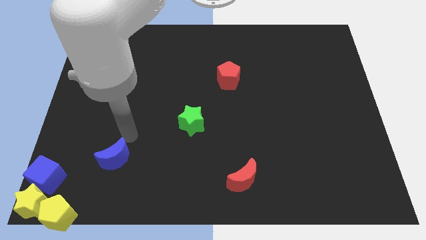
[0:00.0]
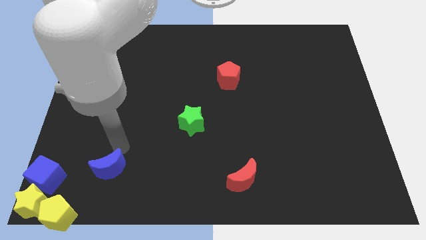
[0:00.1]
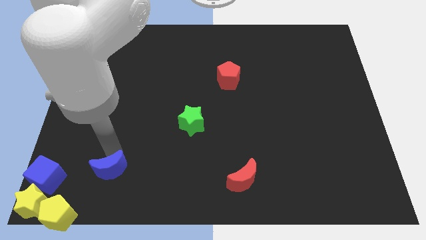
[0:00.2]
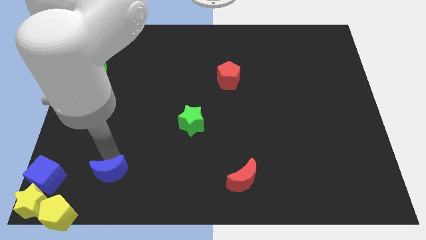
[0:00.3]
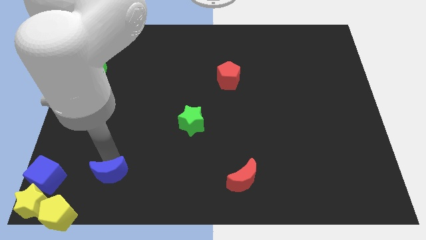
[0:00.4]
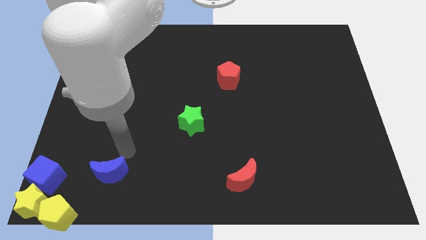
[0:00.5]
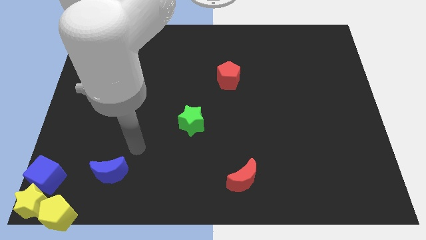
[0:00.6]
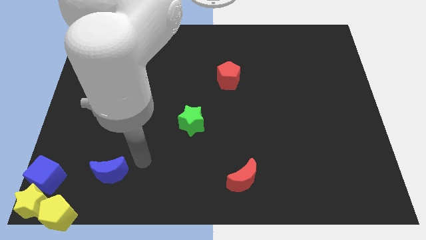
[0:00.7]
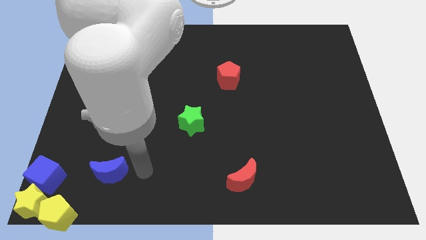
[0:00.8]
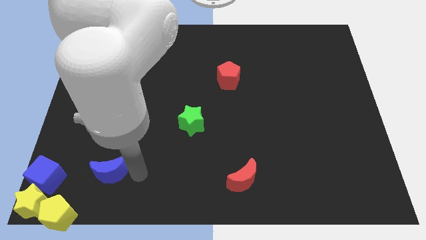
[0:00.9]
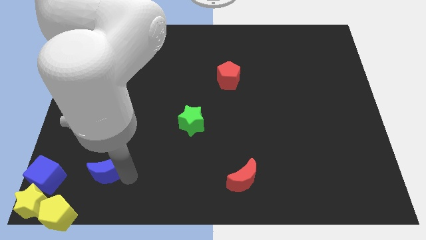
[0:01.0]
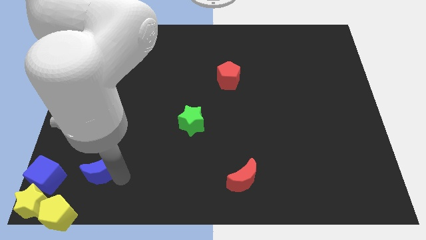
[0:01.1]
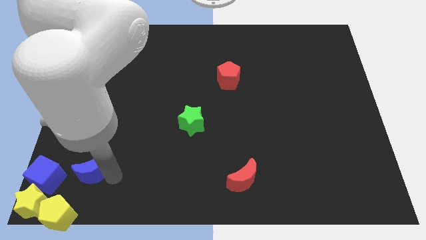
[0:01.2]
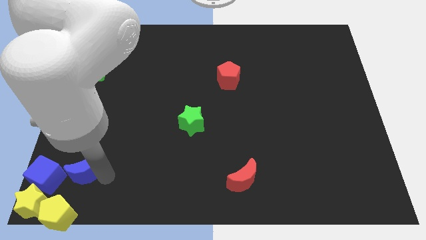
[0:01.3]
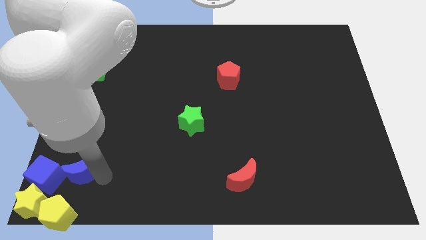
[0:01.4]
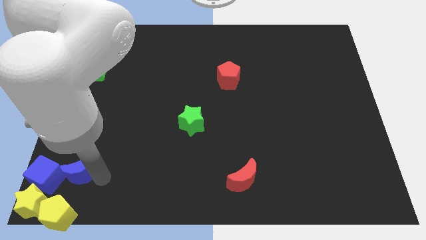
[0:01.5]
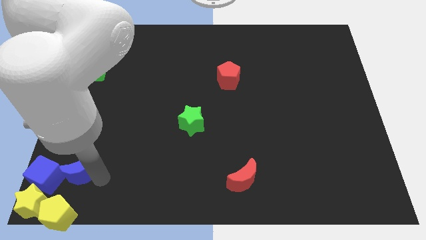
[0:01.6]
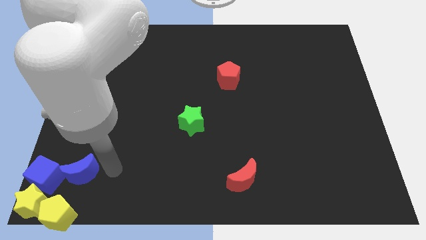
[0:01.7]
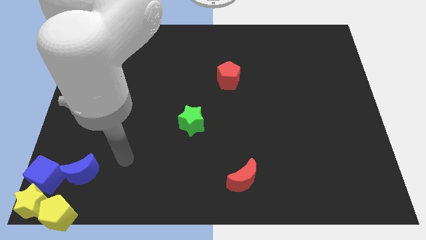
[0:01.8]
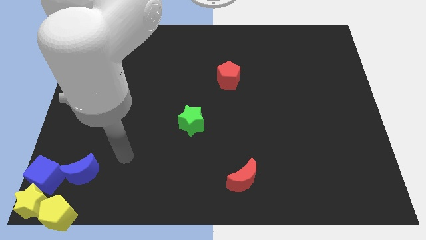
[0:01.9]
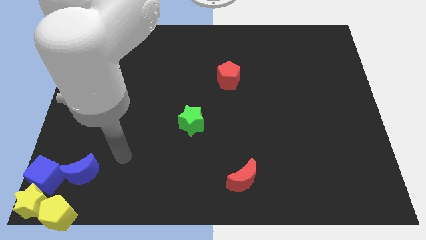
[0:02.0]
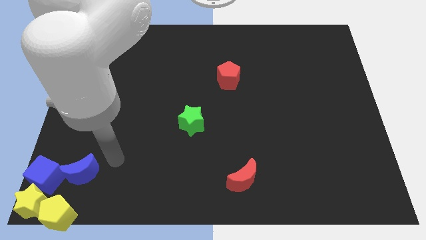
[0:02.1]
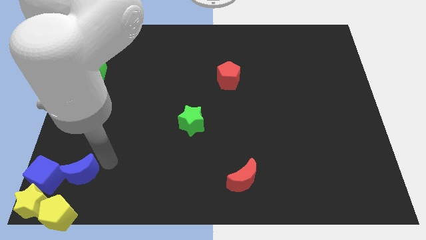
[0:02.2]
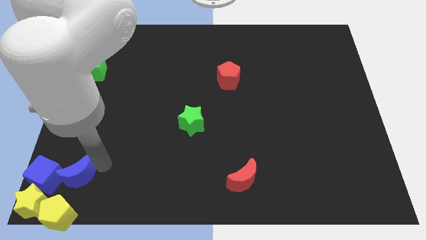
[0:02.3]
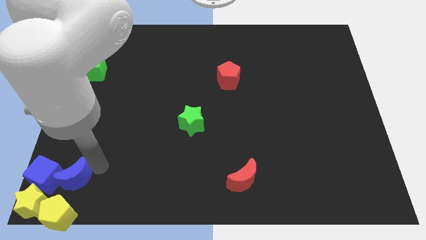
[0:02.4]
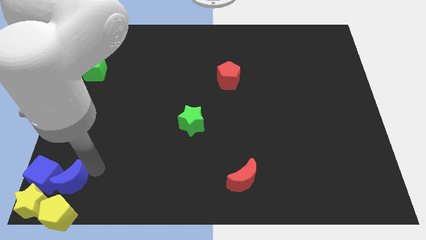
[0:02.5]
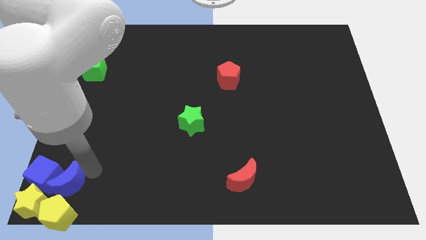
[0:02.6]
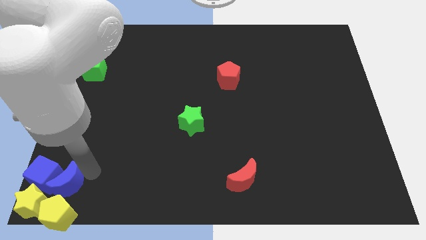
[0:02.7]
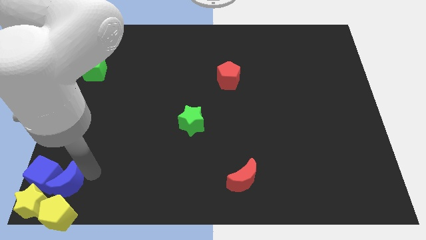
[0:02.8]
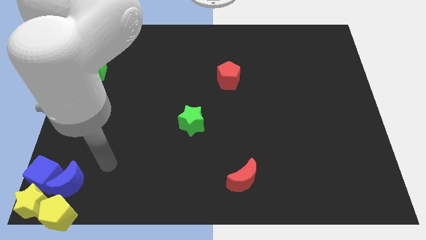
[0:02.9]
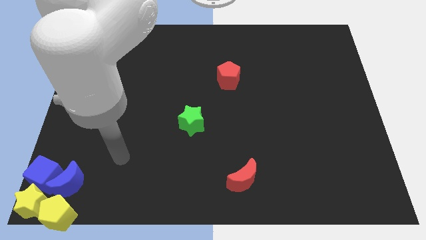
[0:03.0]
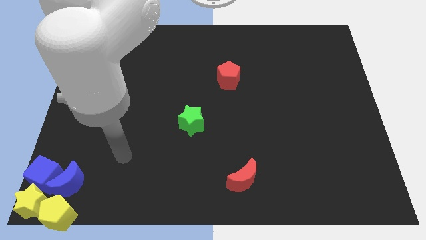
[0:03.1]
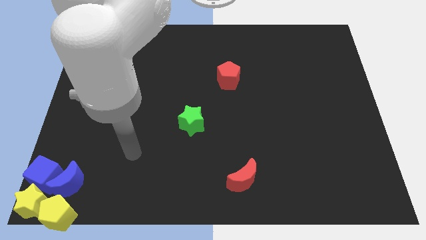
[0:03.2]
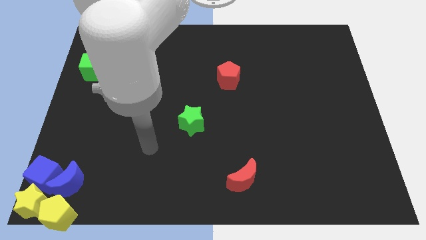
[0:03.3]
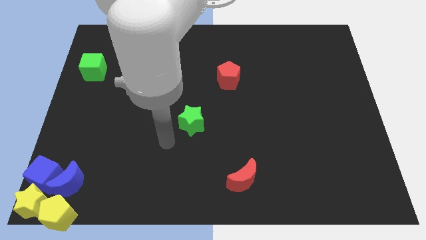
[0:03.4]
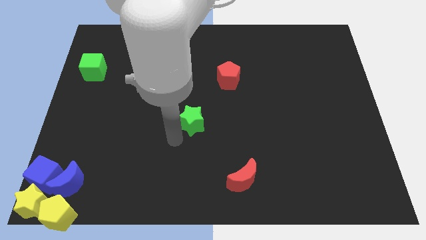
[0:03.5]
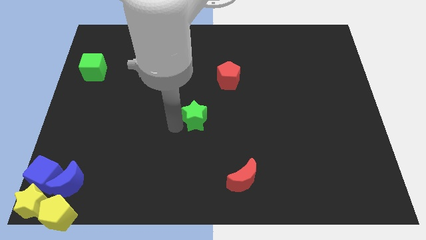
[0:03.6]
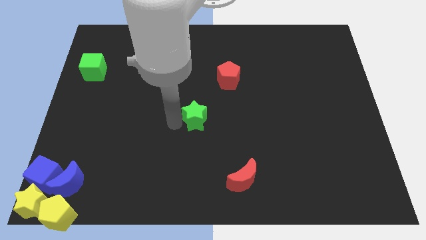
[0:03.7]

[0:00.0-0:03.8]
move the blue moon above the yellow pentagon

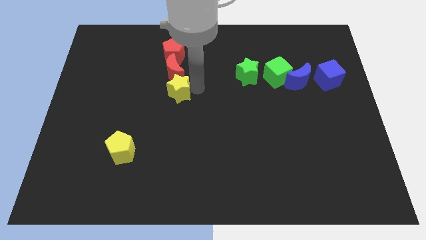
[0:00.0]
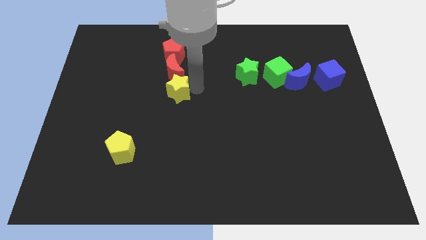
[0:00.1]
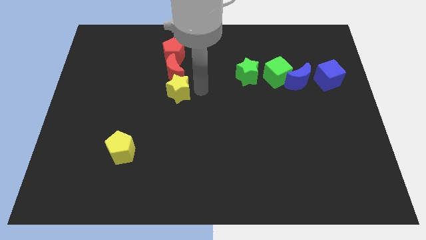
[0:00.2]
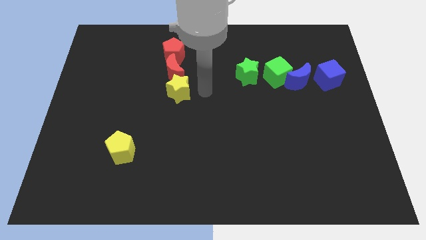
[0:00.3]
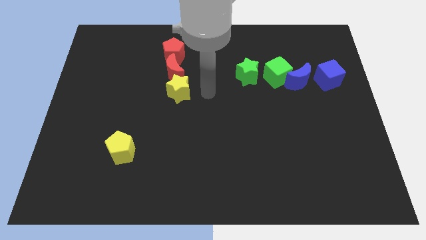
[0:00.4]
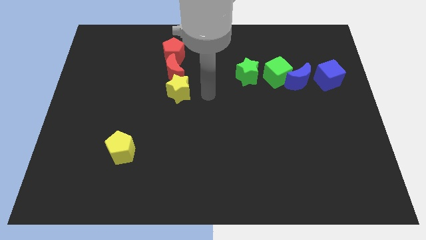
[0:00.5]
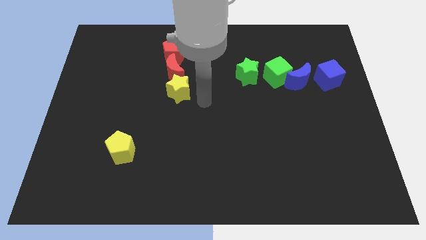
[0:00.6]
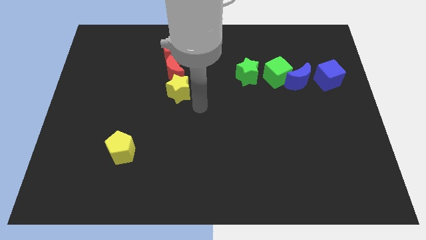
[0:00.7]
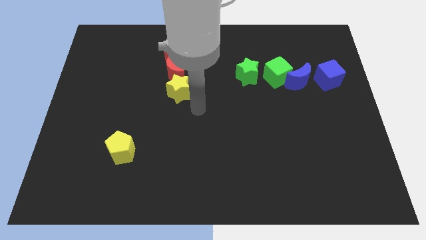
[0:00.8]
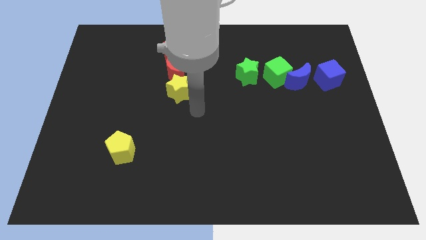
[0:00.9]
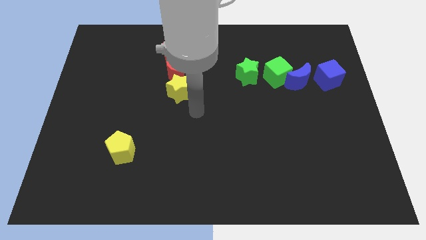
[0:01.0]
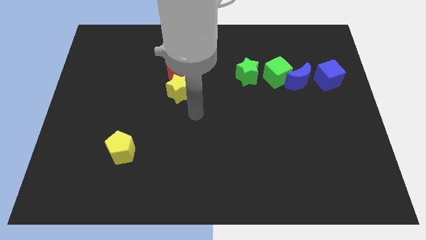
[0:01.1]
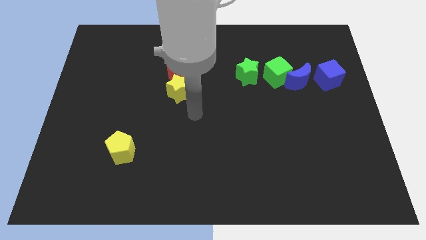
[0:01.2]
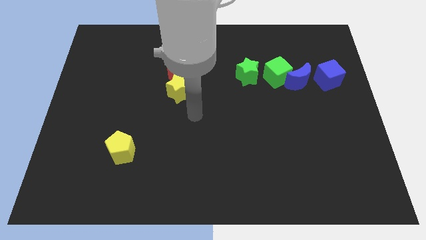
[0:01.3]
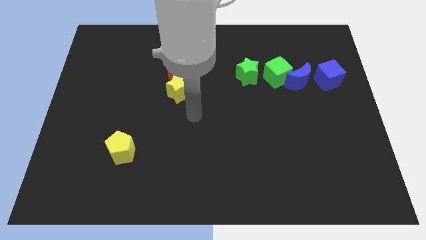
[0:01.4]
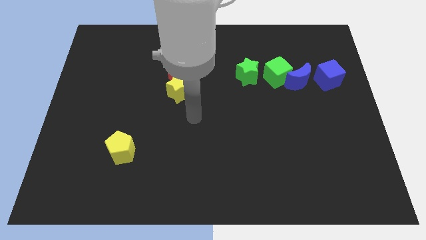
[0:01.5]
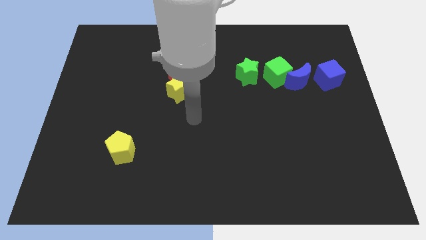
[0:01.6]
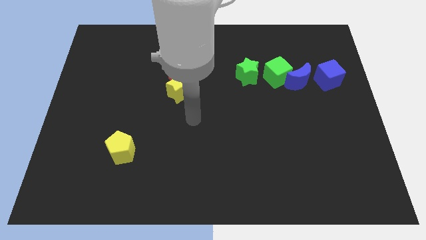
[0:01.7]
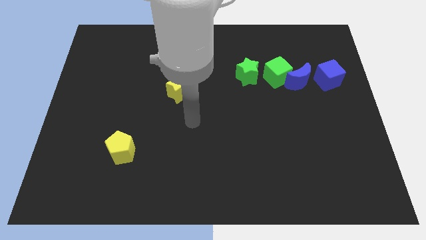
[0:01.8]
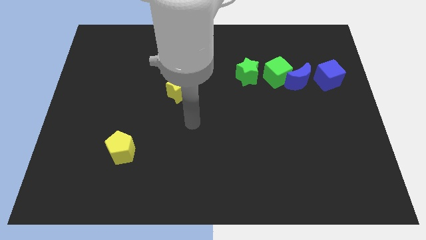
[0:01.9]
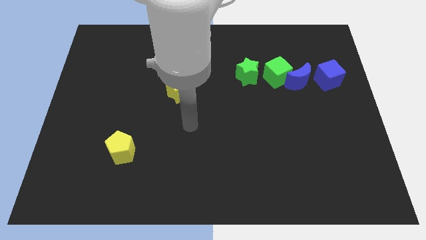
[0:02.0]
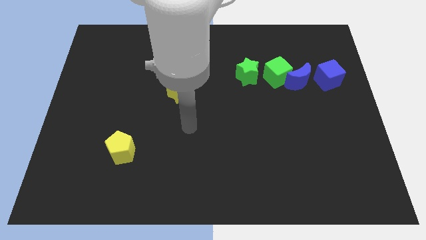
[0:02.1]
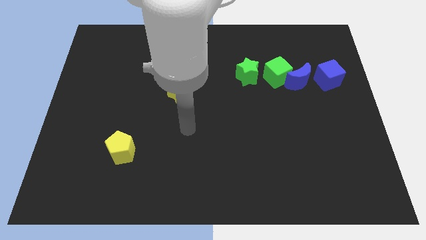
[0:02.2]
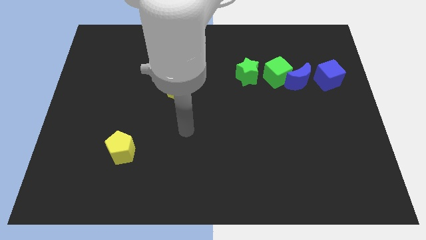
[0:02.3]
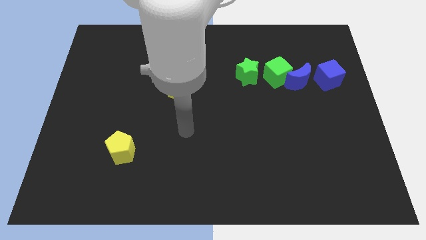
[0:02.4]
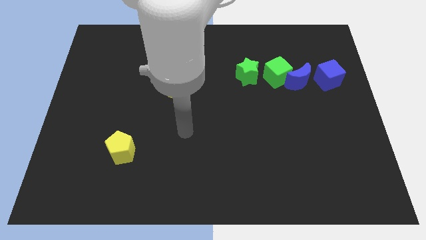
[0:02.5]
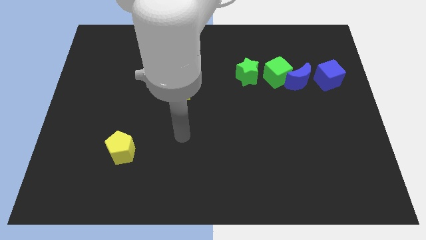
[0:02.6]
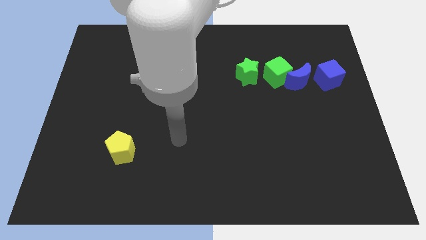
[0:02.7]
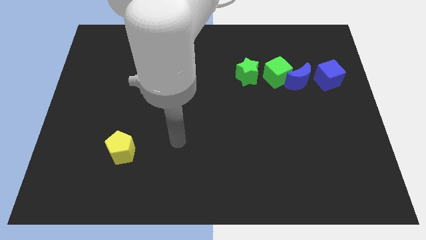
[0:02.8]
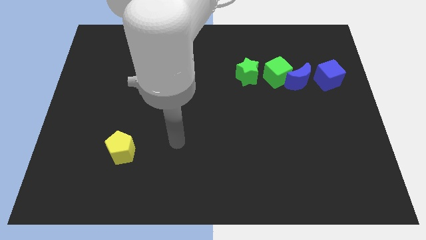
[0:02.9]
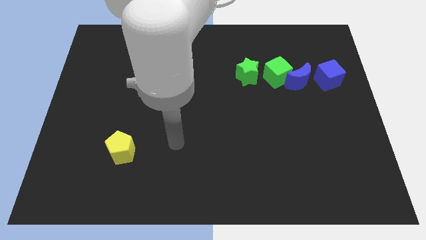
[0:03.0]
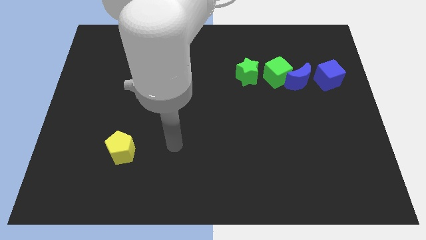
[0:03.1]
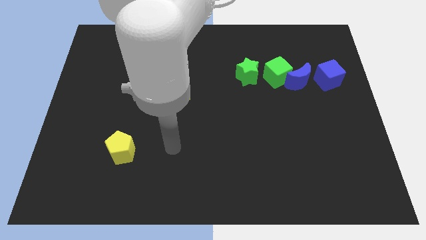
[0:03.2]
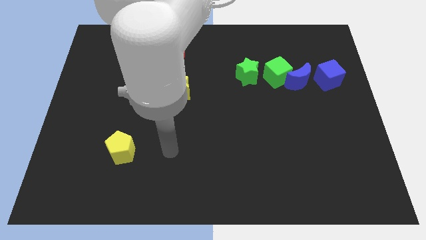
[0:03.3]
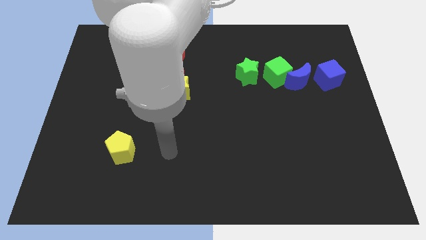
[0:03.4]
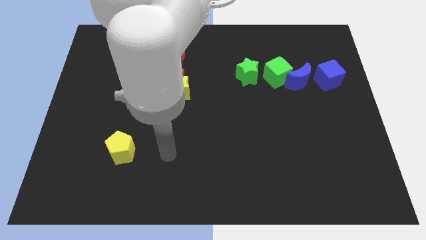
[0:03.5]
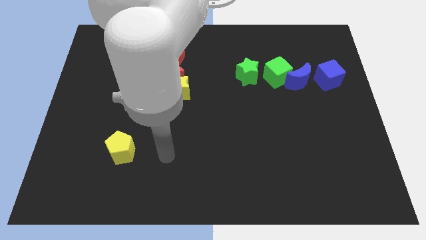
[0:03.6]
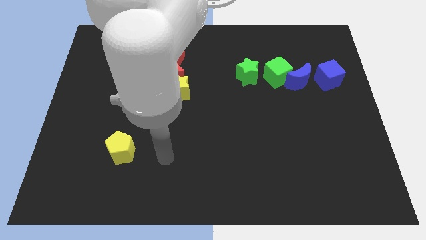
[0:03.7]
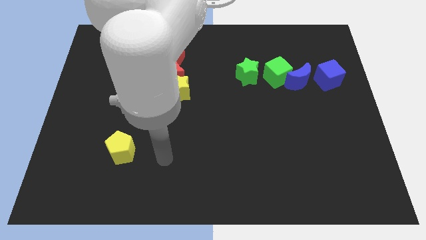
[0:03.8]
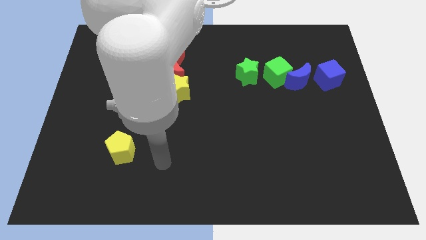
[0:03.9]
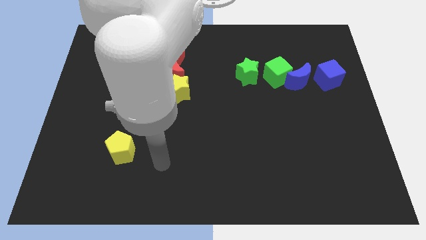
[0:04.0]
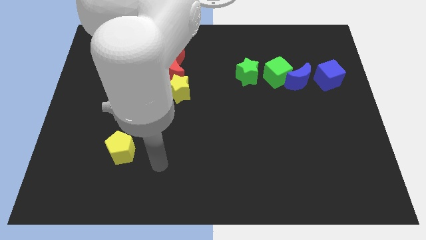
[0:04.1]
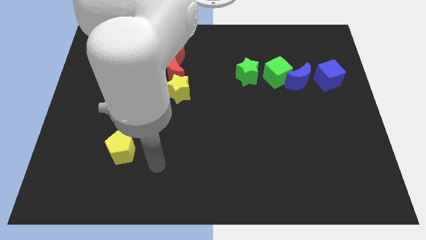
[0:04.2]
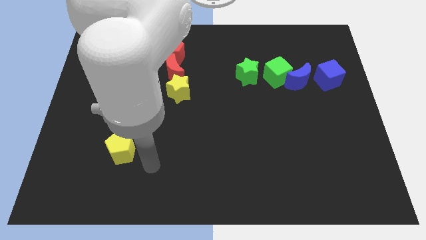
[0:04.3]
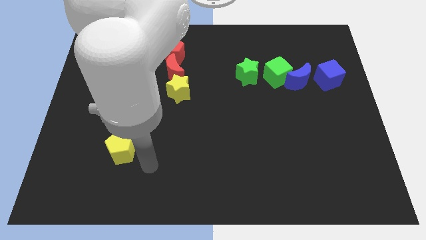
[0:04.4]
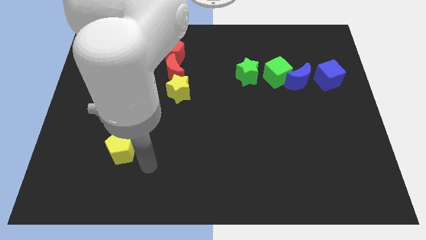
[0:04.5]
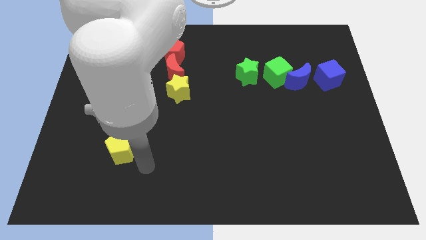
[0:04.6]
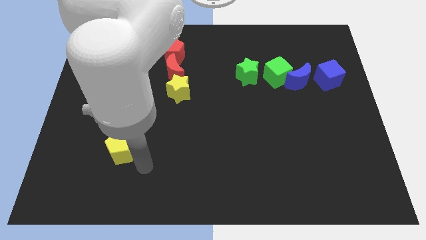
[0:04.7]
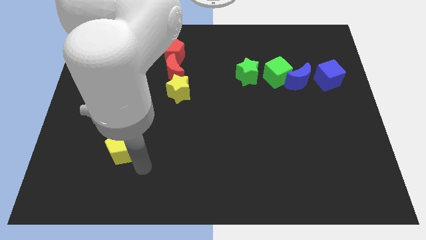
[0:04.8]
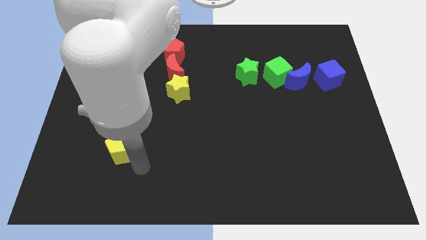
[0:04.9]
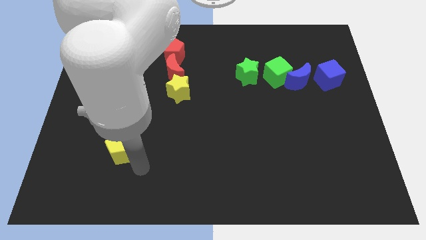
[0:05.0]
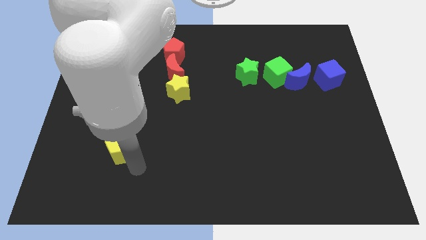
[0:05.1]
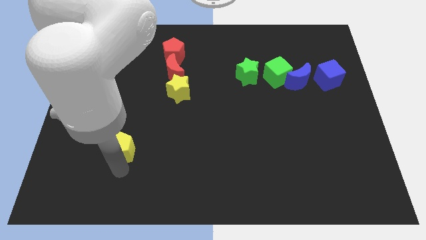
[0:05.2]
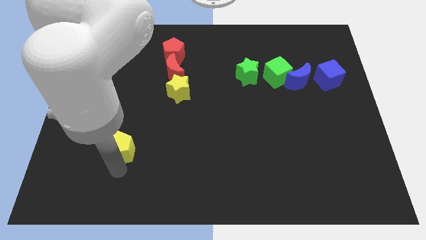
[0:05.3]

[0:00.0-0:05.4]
place yourself at the bottom of the yellow pentagon
